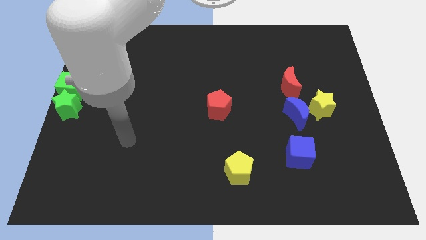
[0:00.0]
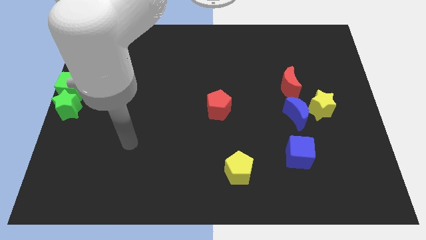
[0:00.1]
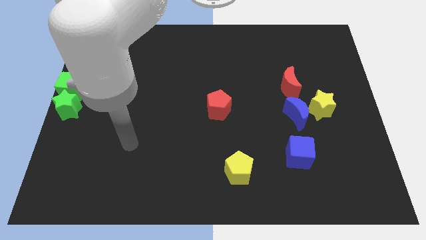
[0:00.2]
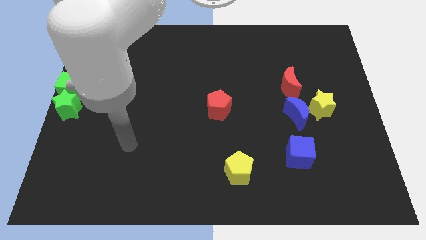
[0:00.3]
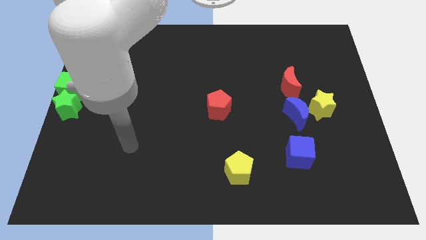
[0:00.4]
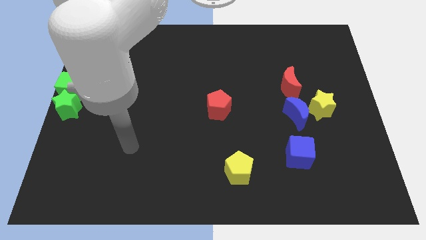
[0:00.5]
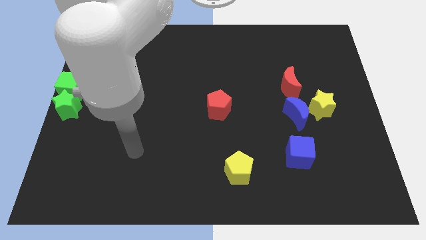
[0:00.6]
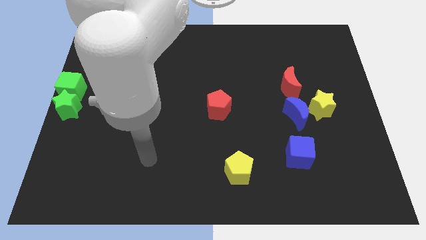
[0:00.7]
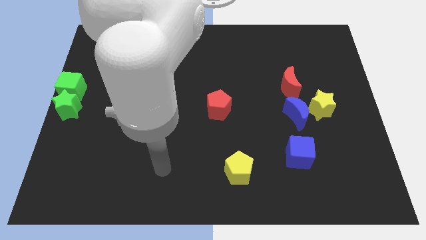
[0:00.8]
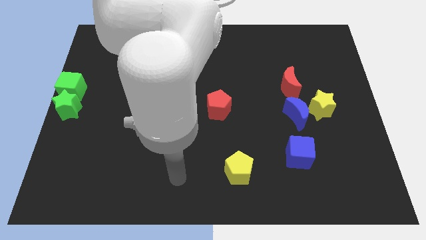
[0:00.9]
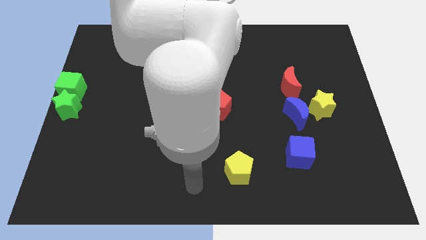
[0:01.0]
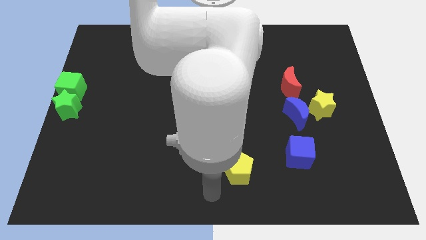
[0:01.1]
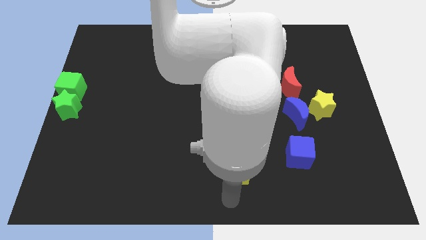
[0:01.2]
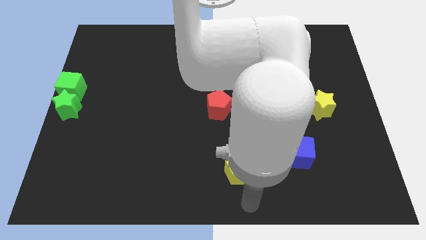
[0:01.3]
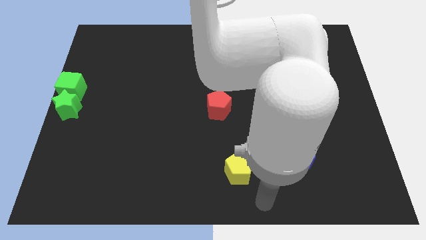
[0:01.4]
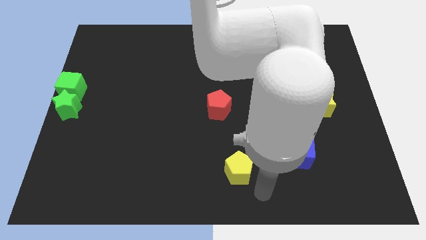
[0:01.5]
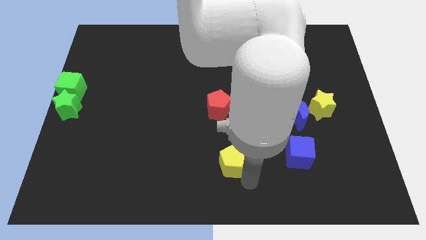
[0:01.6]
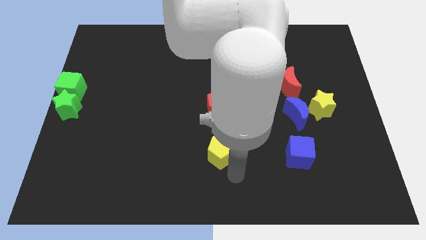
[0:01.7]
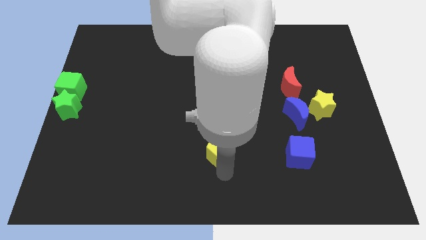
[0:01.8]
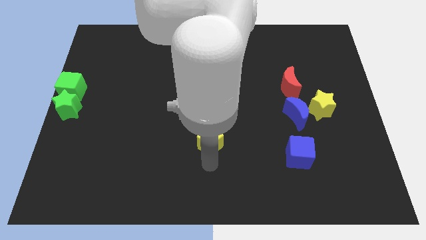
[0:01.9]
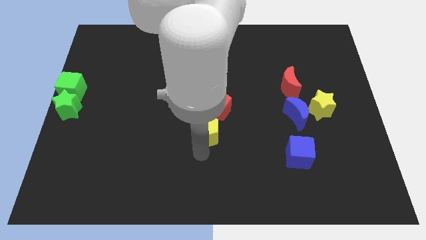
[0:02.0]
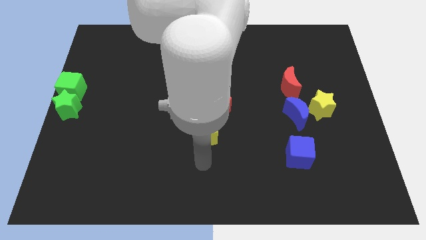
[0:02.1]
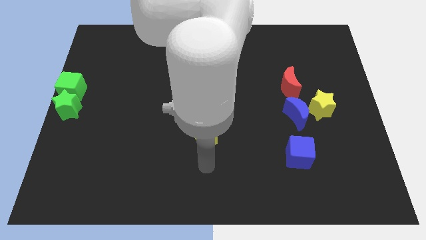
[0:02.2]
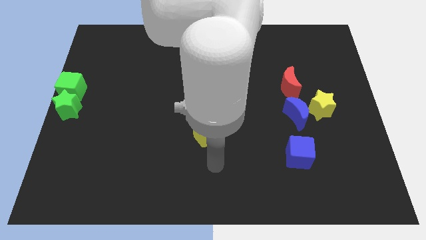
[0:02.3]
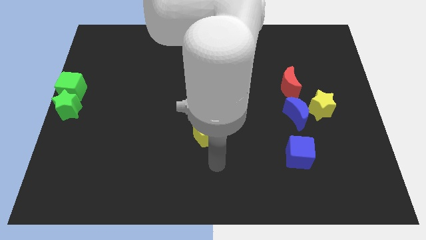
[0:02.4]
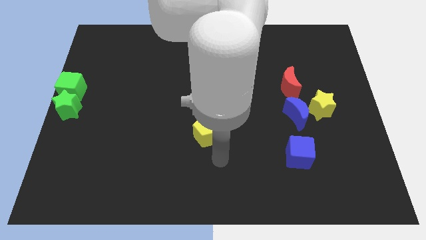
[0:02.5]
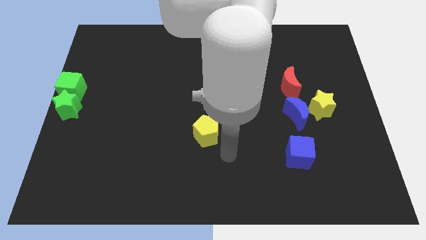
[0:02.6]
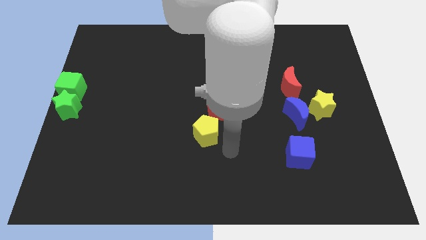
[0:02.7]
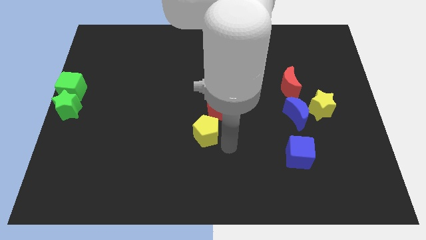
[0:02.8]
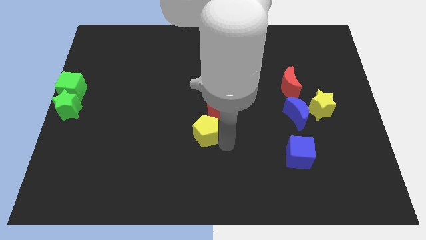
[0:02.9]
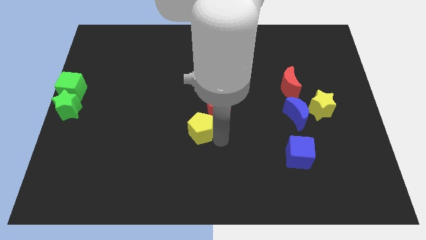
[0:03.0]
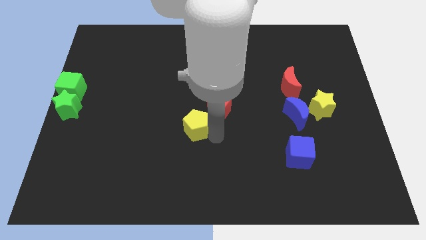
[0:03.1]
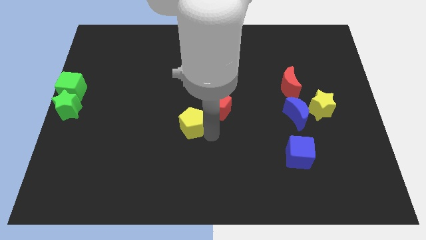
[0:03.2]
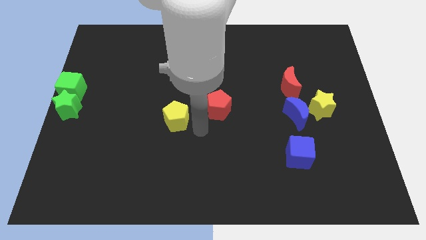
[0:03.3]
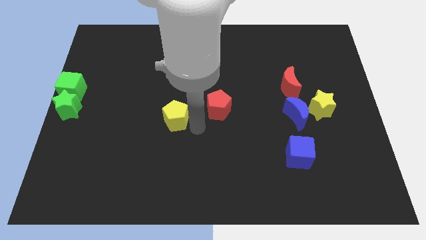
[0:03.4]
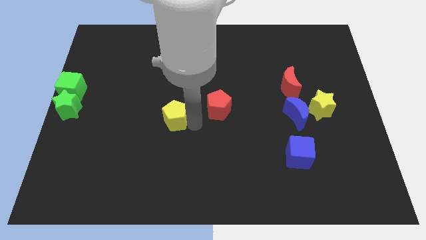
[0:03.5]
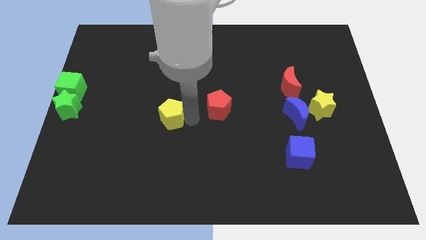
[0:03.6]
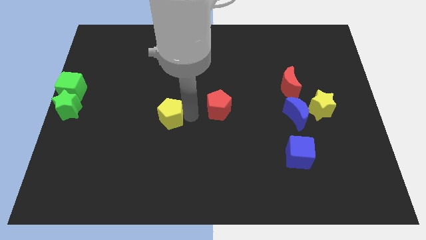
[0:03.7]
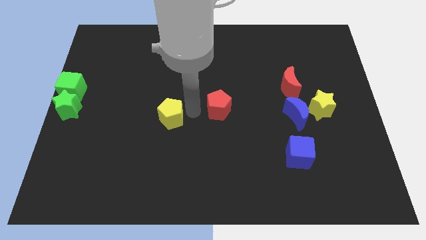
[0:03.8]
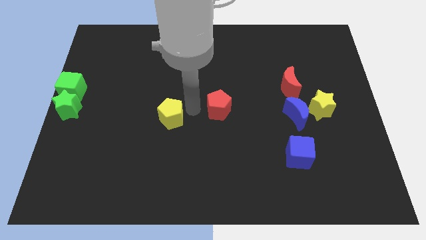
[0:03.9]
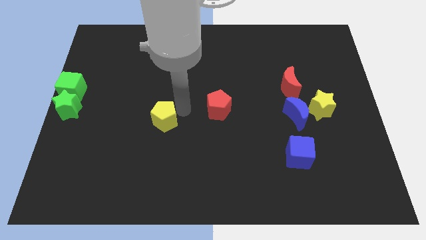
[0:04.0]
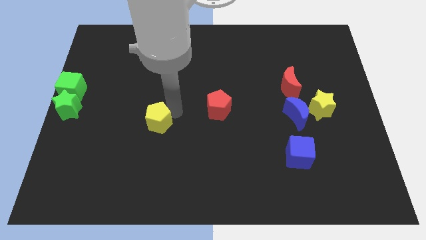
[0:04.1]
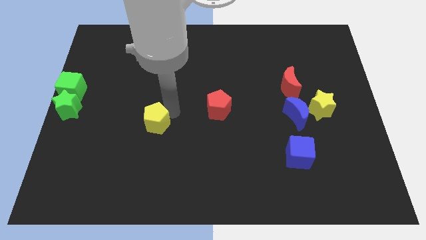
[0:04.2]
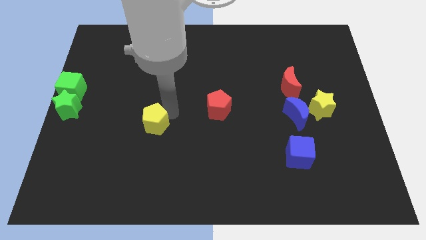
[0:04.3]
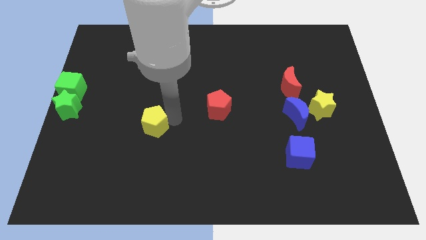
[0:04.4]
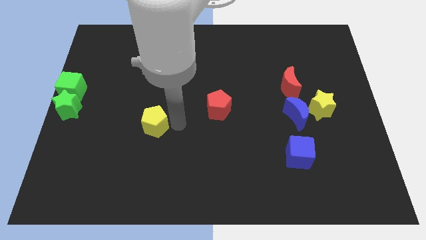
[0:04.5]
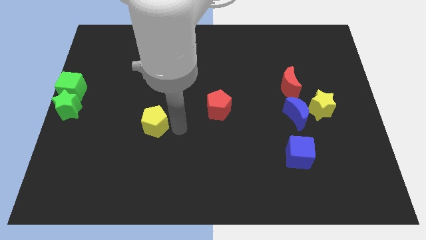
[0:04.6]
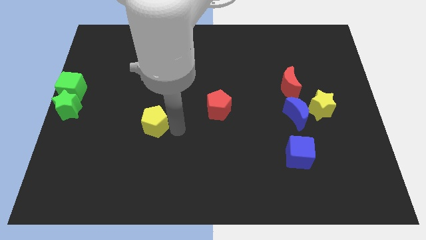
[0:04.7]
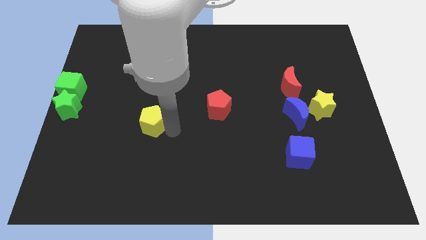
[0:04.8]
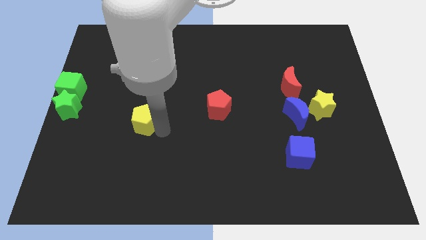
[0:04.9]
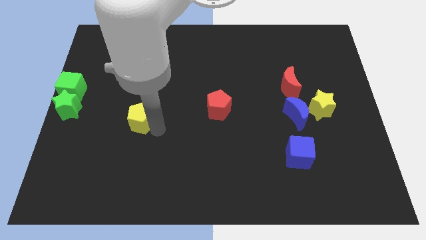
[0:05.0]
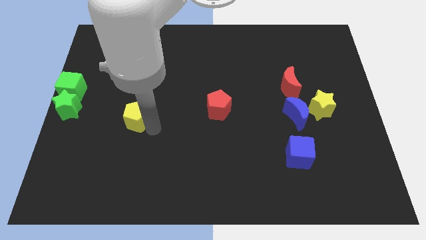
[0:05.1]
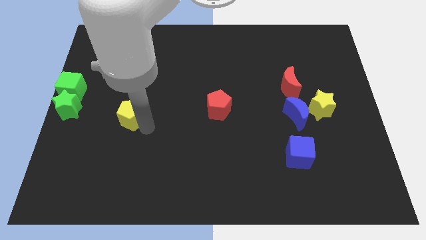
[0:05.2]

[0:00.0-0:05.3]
move the yellow pentagon to the middle of green star and red pentagon

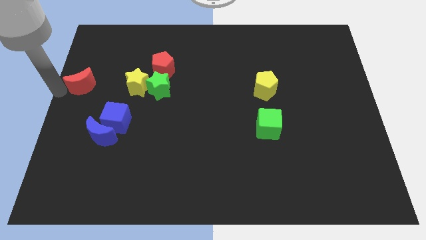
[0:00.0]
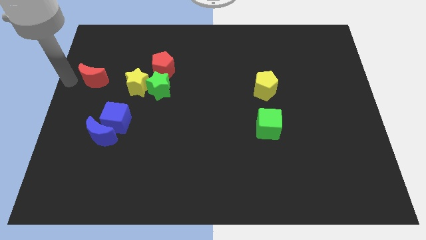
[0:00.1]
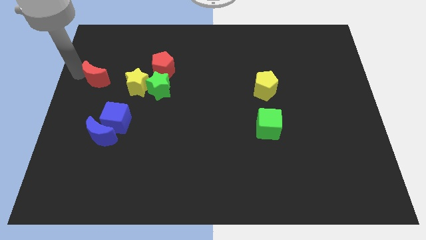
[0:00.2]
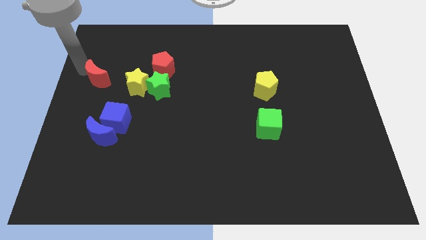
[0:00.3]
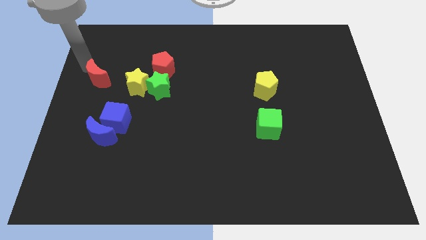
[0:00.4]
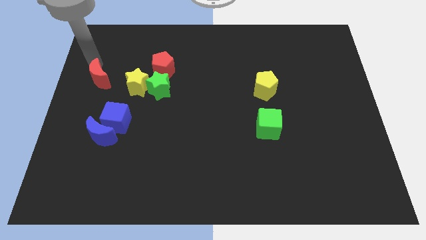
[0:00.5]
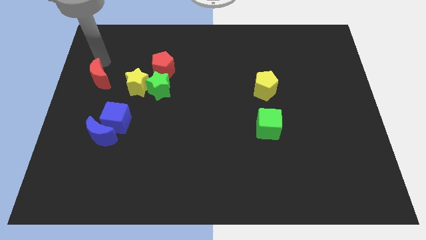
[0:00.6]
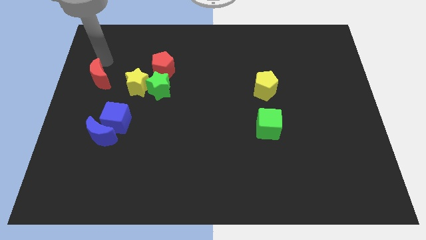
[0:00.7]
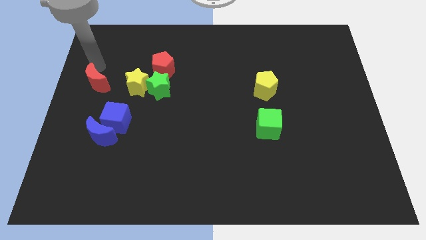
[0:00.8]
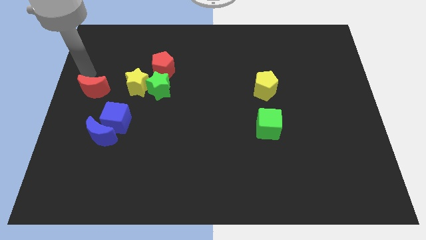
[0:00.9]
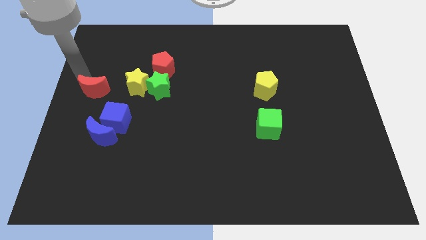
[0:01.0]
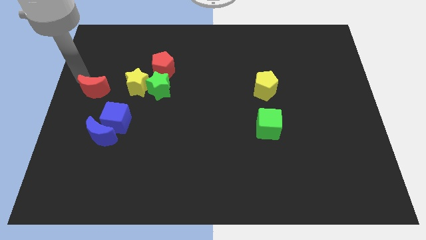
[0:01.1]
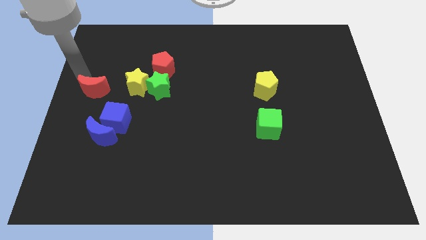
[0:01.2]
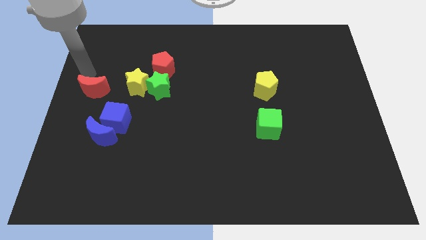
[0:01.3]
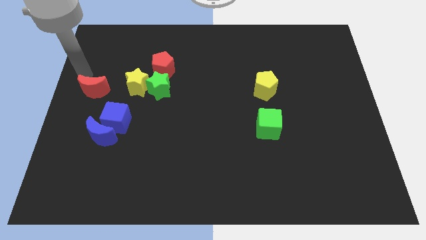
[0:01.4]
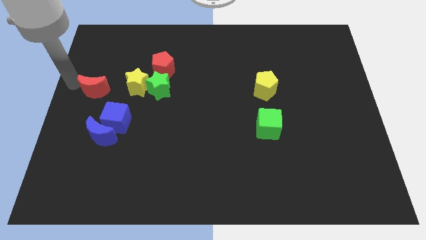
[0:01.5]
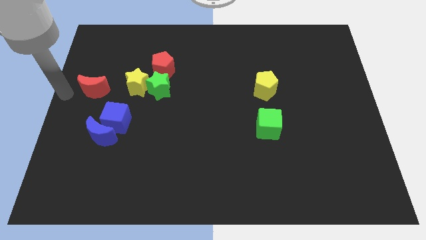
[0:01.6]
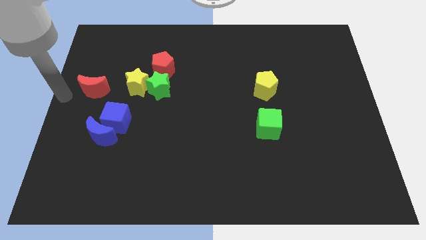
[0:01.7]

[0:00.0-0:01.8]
push the red crescent diagonal above the blue cube

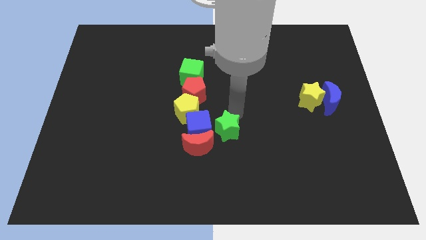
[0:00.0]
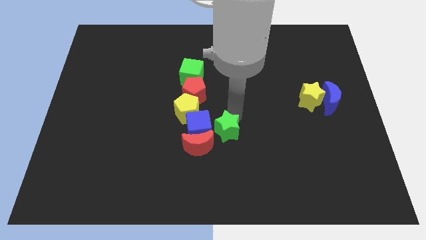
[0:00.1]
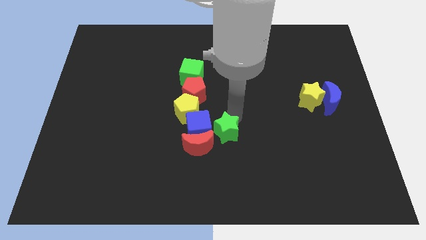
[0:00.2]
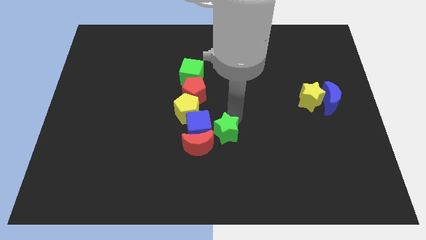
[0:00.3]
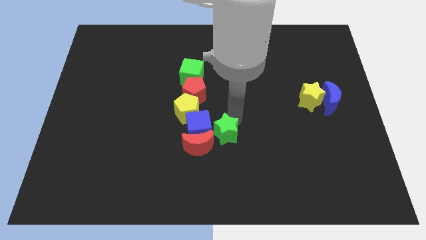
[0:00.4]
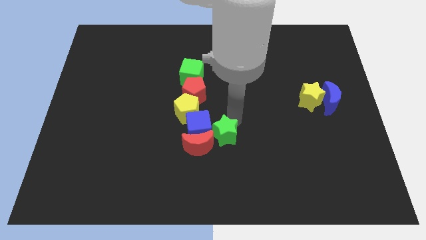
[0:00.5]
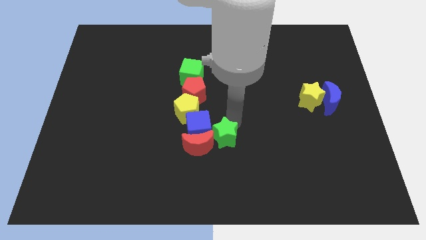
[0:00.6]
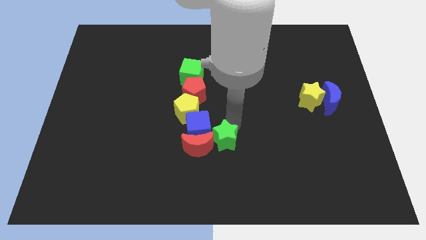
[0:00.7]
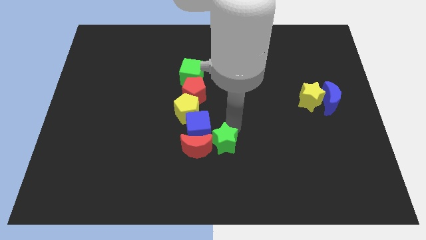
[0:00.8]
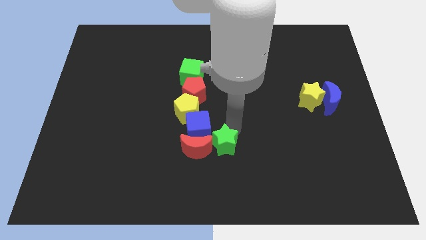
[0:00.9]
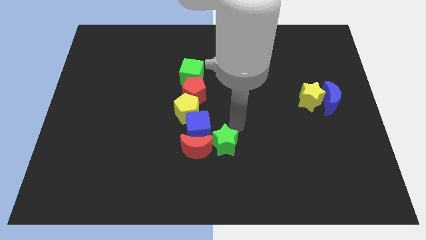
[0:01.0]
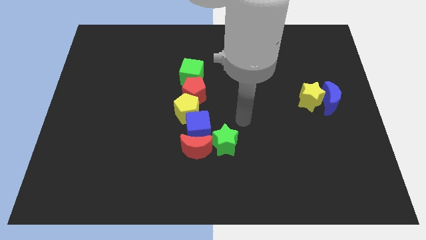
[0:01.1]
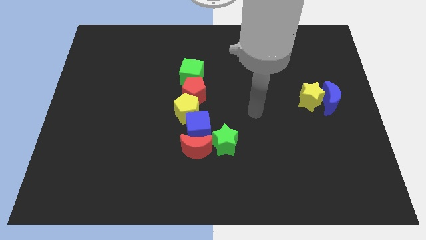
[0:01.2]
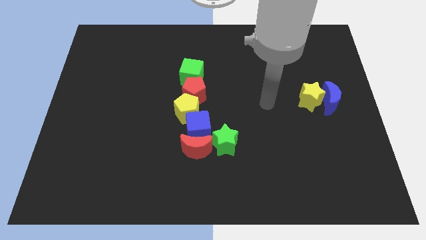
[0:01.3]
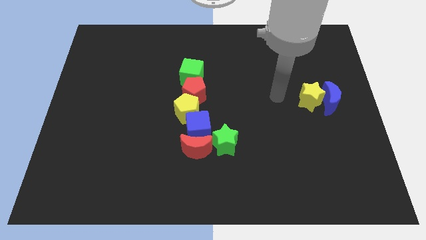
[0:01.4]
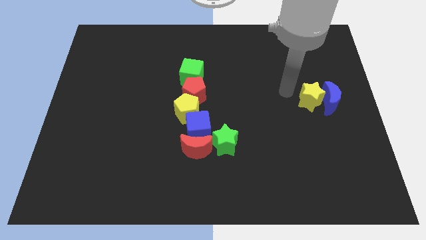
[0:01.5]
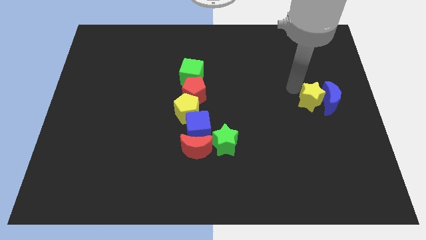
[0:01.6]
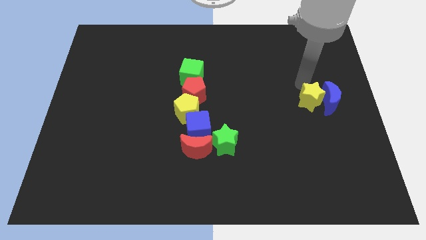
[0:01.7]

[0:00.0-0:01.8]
push the green star slightly to the right of the red crescent

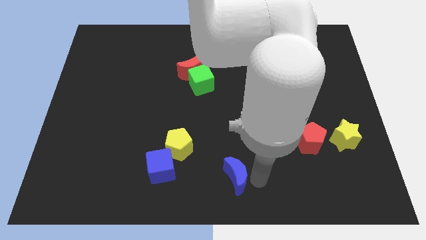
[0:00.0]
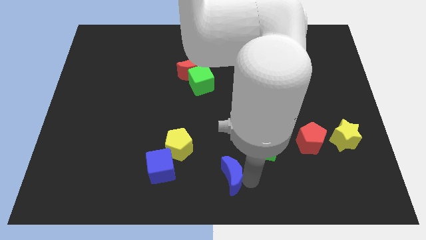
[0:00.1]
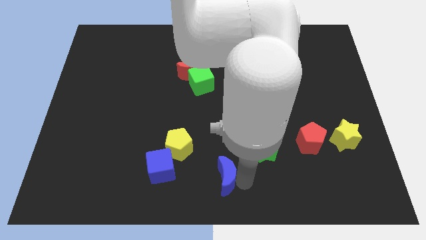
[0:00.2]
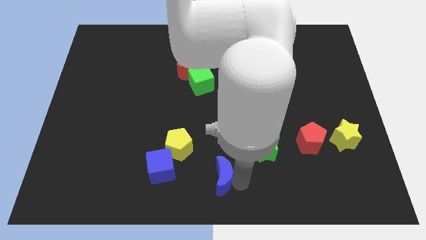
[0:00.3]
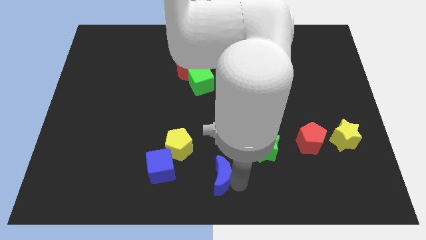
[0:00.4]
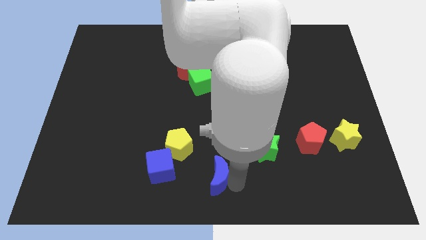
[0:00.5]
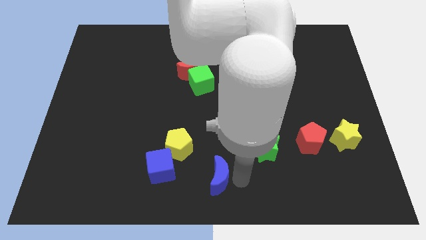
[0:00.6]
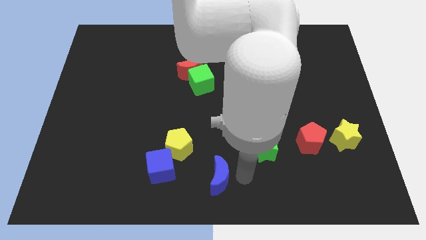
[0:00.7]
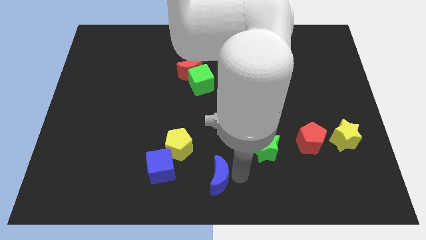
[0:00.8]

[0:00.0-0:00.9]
move the blue crescent to the right of the blue cube
